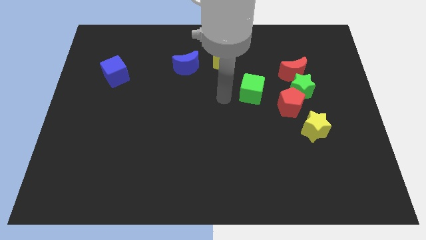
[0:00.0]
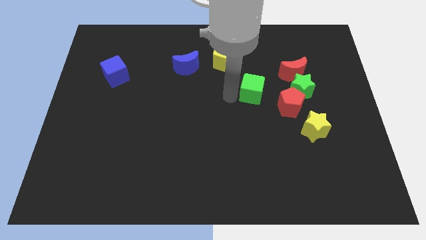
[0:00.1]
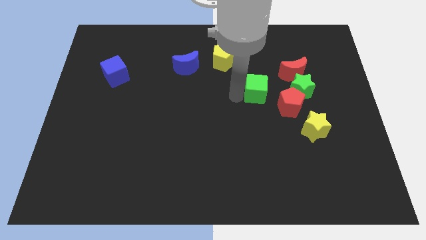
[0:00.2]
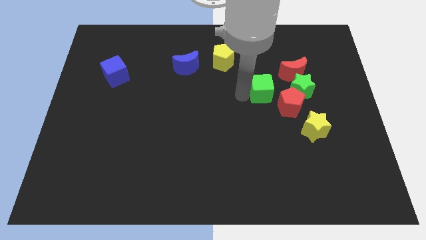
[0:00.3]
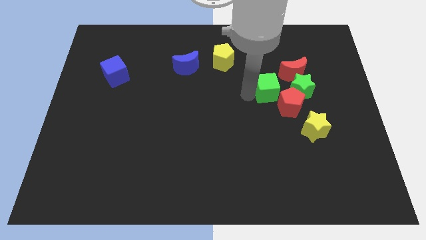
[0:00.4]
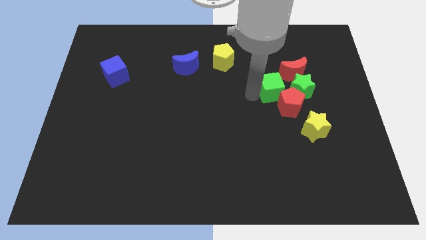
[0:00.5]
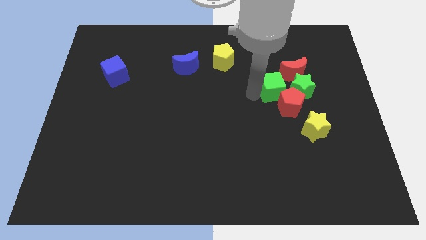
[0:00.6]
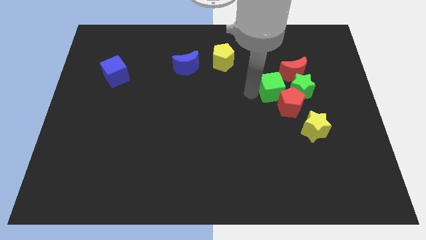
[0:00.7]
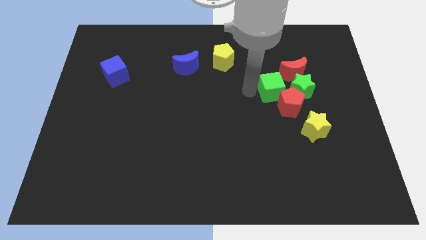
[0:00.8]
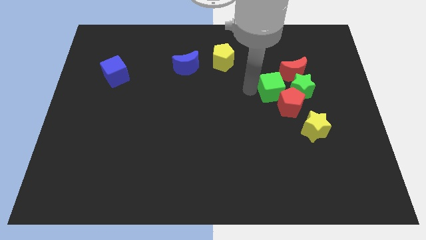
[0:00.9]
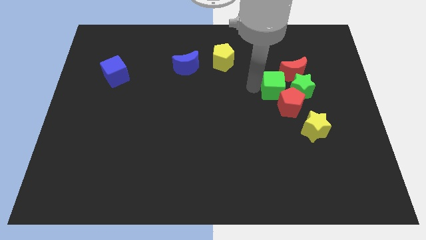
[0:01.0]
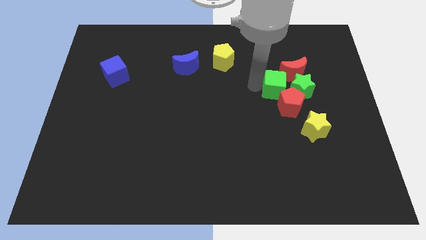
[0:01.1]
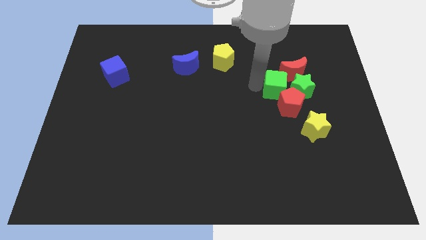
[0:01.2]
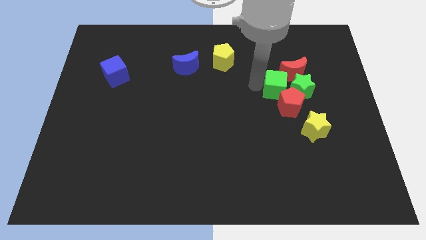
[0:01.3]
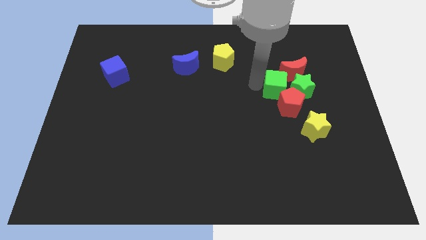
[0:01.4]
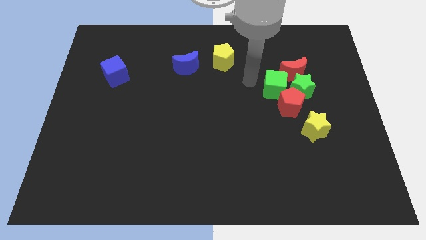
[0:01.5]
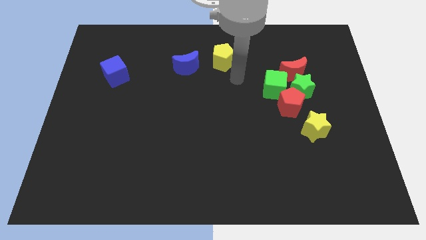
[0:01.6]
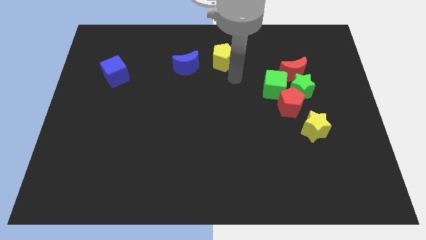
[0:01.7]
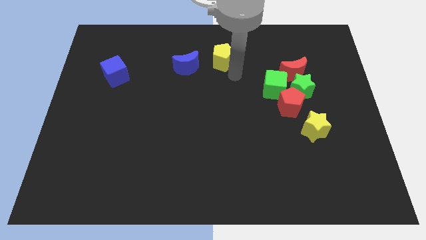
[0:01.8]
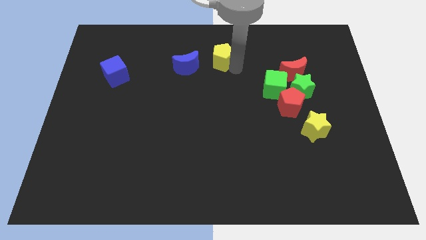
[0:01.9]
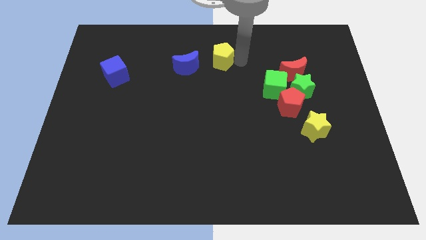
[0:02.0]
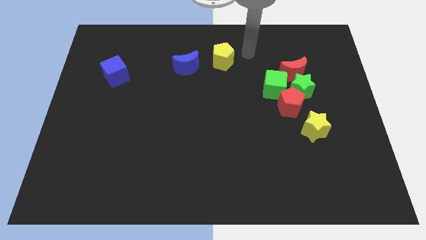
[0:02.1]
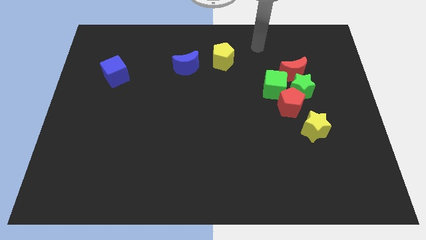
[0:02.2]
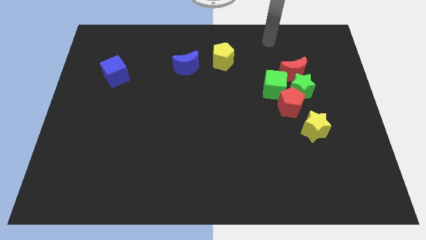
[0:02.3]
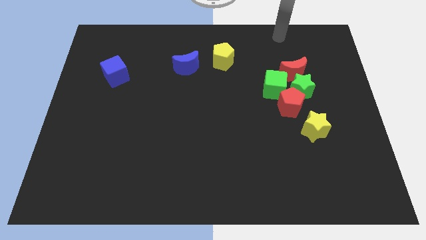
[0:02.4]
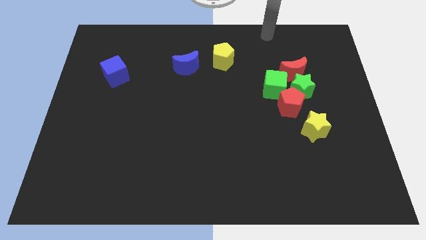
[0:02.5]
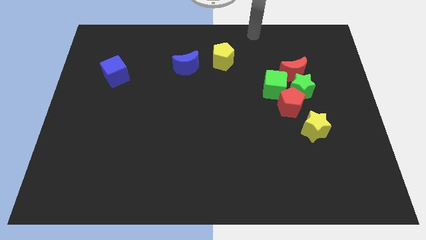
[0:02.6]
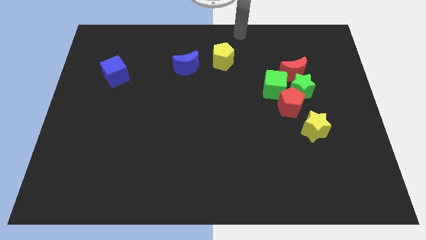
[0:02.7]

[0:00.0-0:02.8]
push the green cube towards the group of blocks

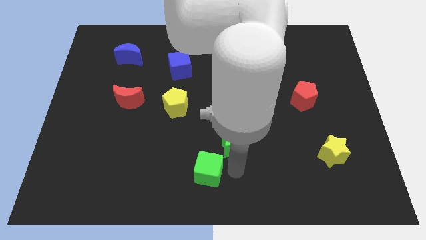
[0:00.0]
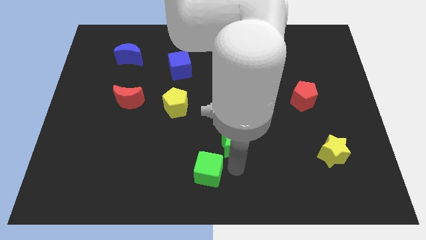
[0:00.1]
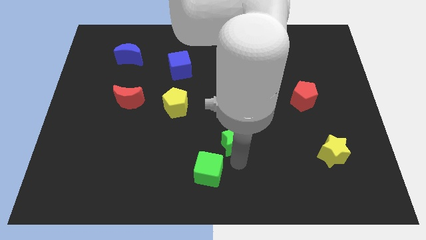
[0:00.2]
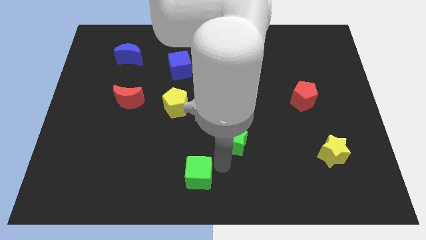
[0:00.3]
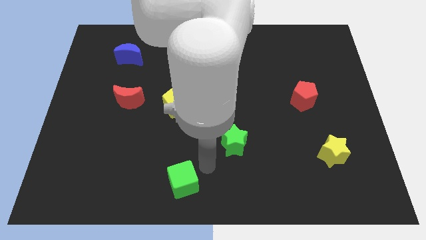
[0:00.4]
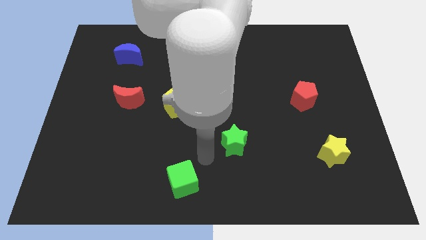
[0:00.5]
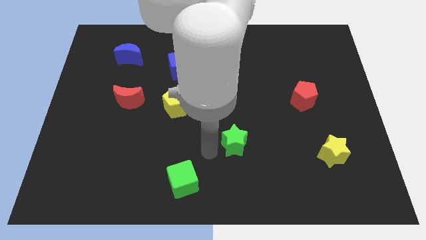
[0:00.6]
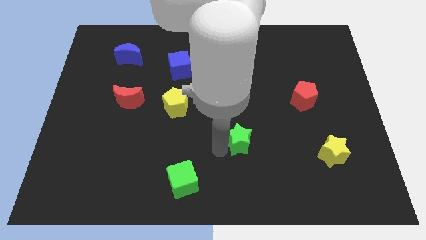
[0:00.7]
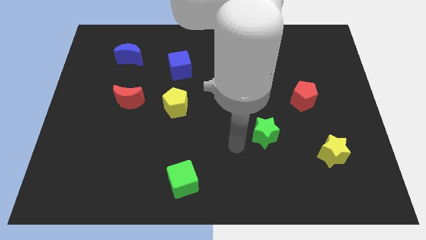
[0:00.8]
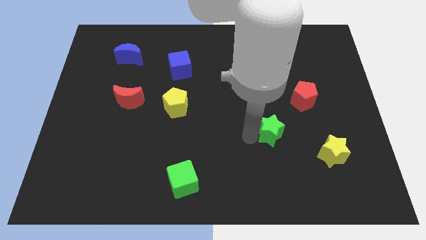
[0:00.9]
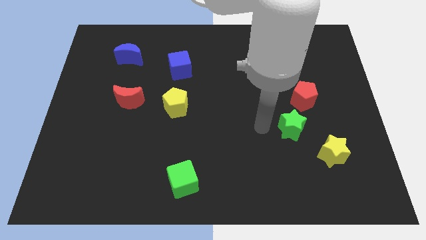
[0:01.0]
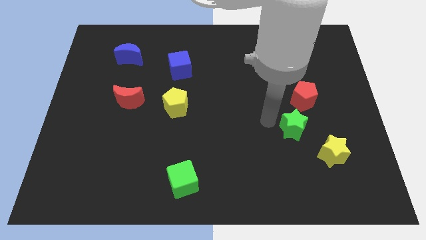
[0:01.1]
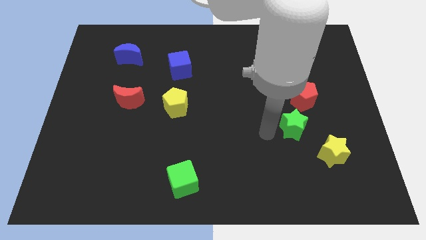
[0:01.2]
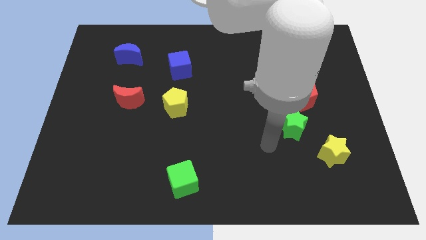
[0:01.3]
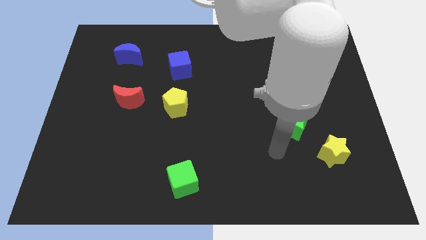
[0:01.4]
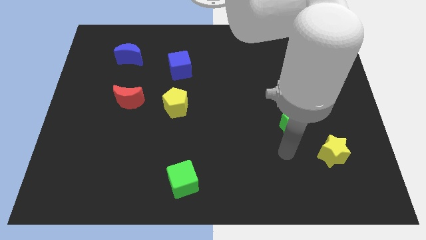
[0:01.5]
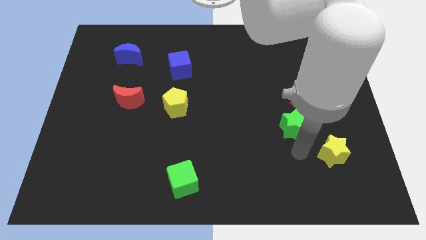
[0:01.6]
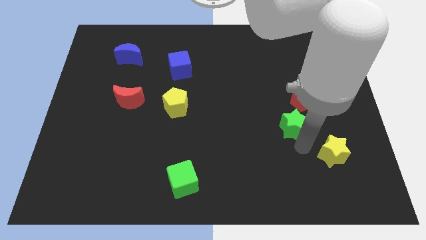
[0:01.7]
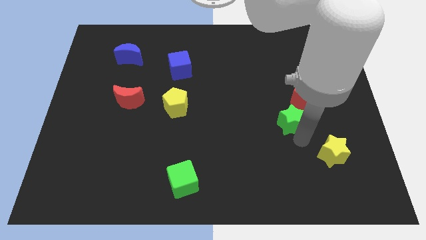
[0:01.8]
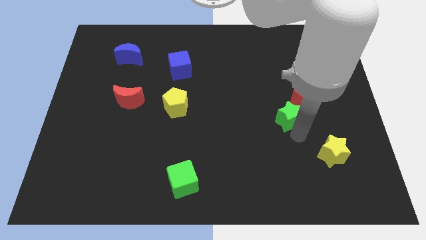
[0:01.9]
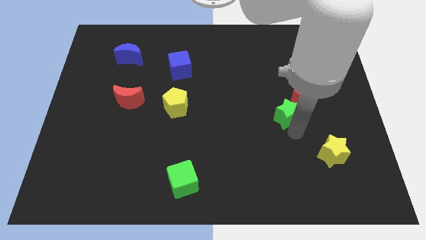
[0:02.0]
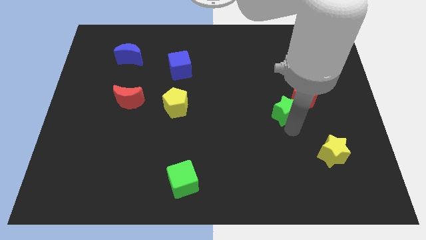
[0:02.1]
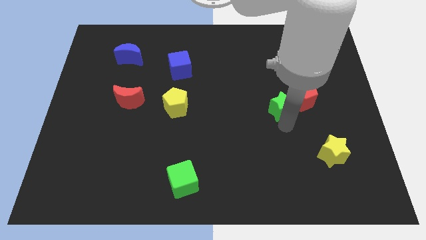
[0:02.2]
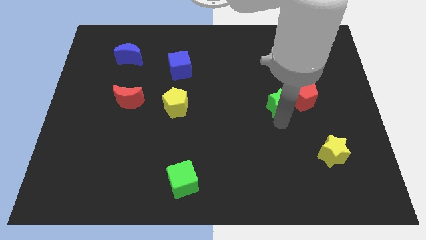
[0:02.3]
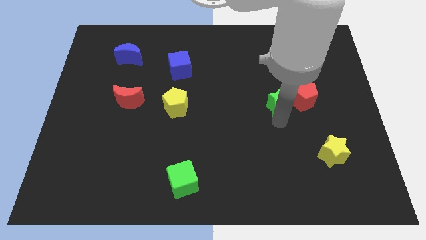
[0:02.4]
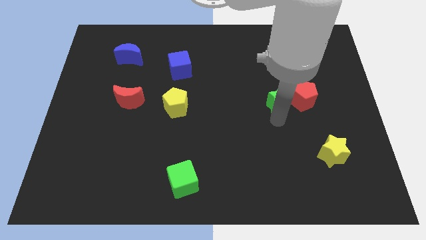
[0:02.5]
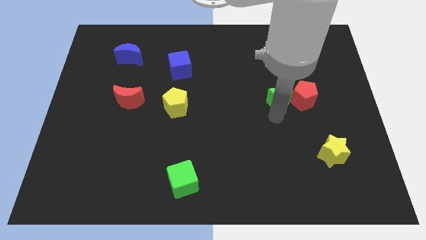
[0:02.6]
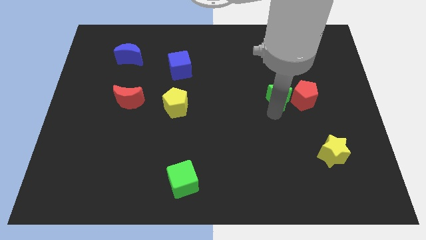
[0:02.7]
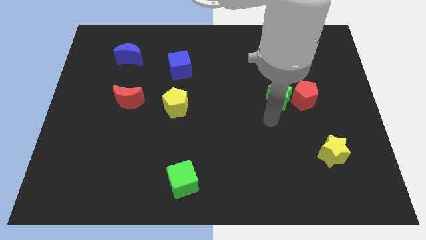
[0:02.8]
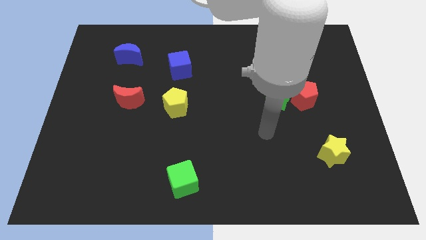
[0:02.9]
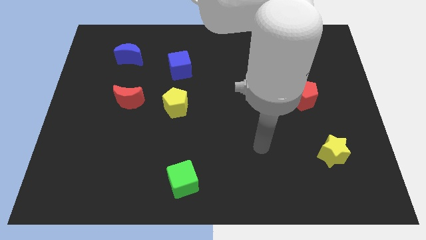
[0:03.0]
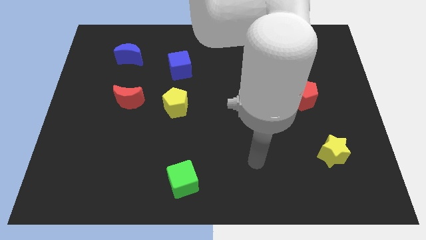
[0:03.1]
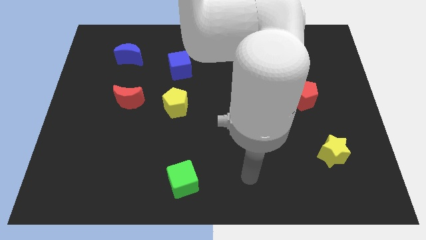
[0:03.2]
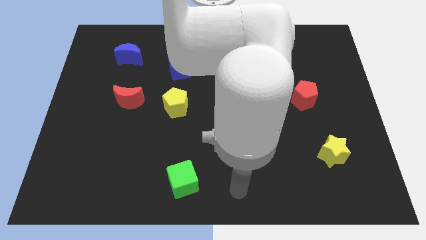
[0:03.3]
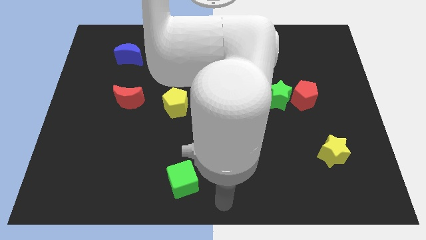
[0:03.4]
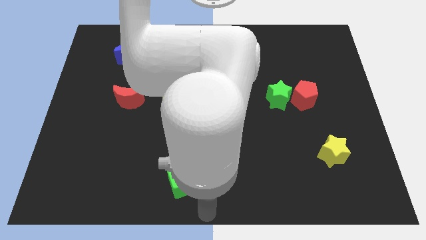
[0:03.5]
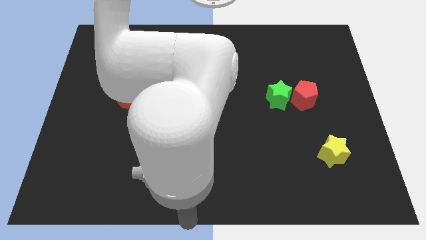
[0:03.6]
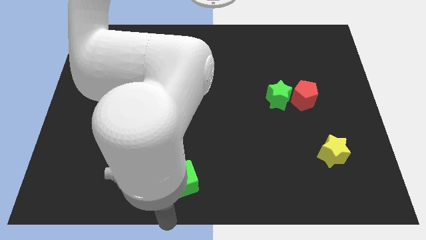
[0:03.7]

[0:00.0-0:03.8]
push the green star into red pentagon

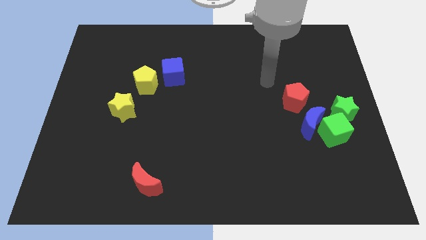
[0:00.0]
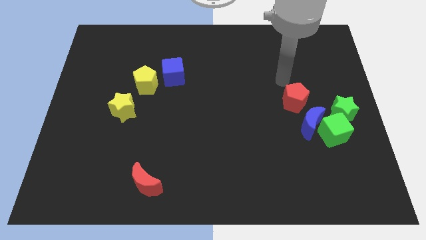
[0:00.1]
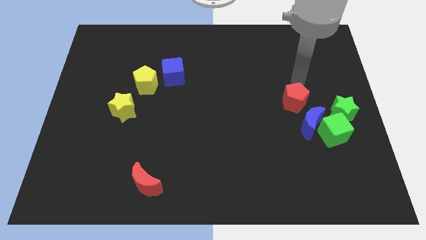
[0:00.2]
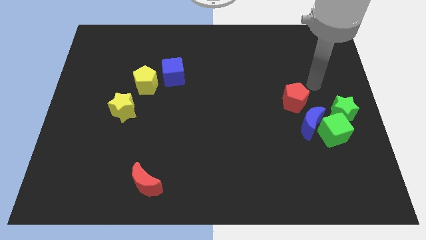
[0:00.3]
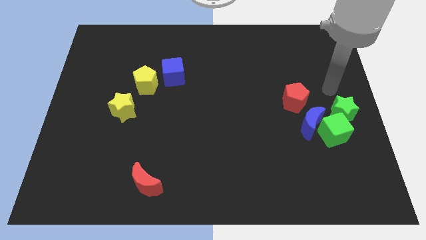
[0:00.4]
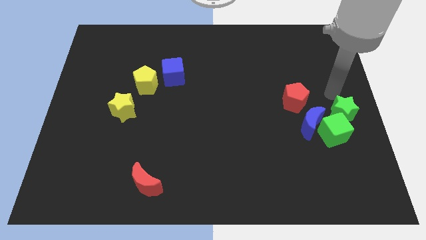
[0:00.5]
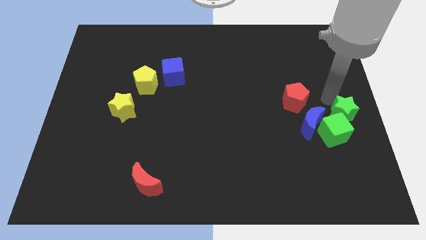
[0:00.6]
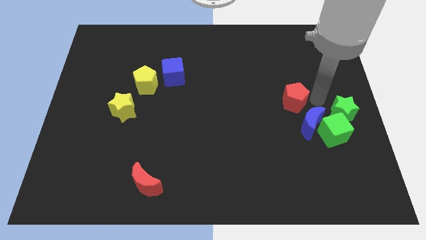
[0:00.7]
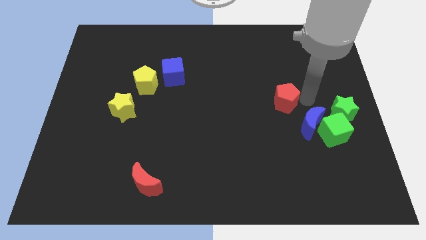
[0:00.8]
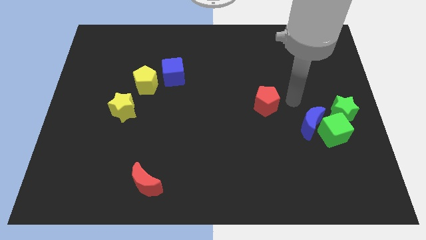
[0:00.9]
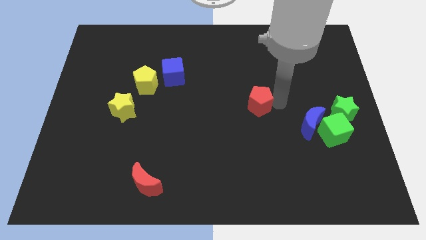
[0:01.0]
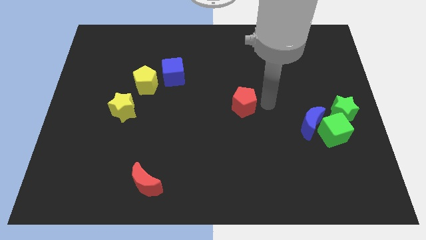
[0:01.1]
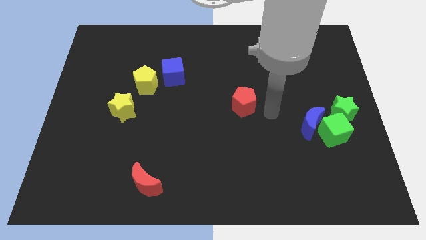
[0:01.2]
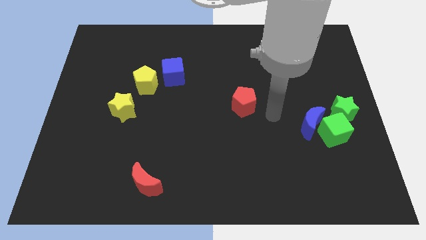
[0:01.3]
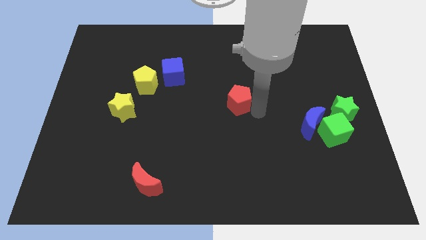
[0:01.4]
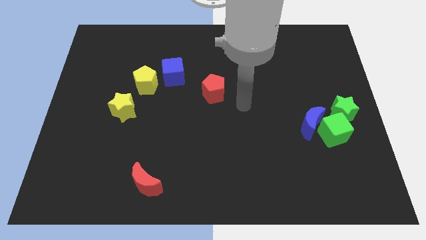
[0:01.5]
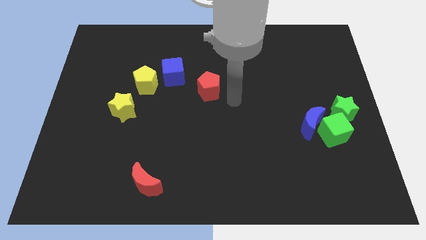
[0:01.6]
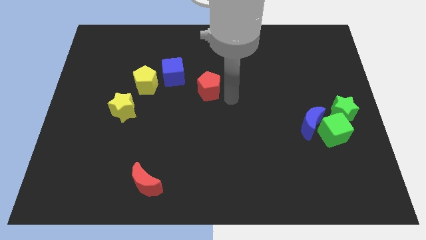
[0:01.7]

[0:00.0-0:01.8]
push the red pentagon to the center side

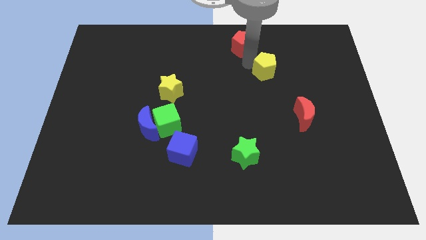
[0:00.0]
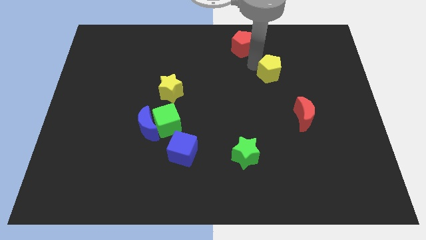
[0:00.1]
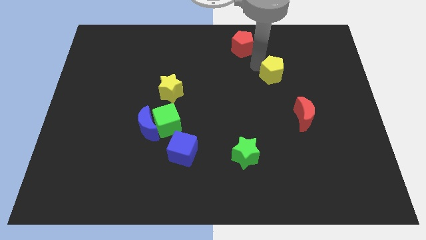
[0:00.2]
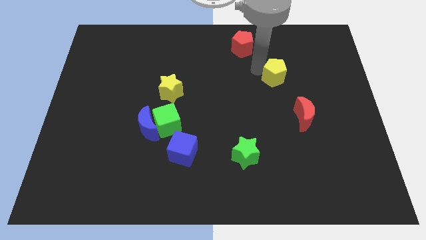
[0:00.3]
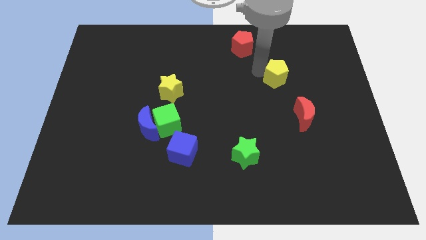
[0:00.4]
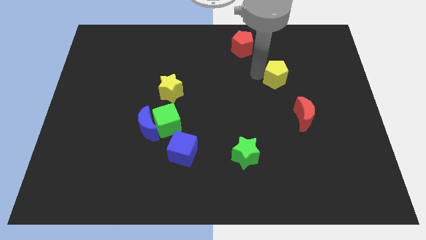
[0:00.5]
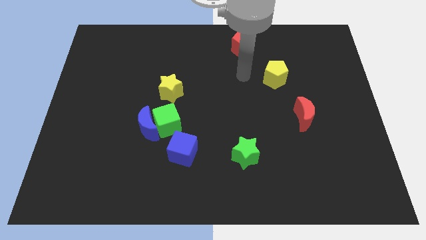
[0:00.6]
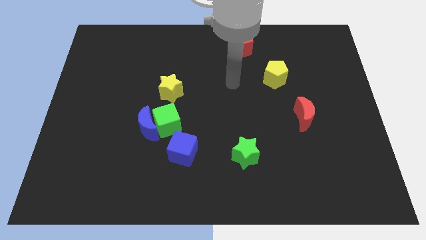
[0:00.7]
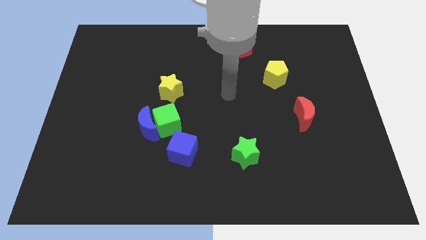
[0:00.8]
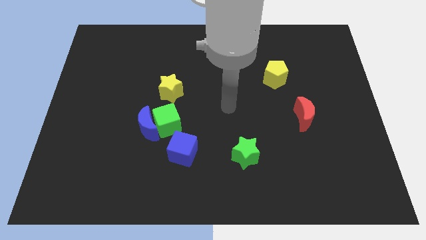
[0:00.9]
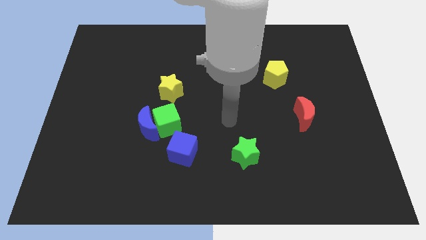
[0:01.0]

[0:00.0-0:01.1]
slide yellow pentagon to the top left of red moon
